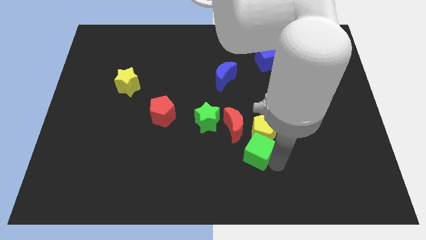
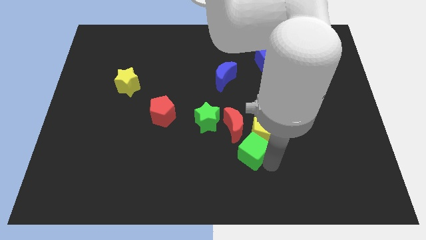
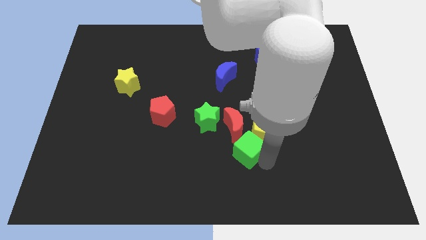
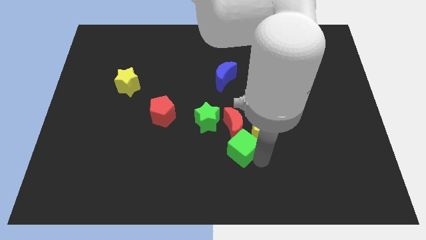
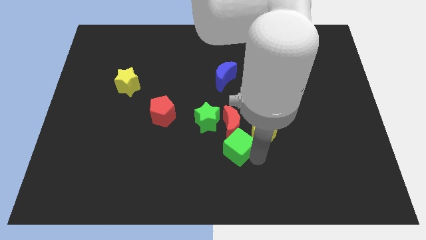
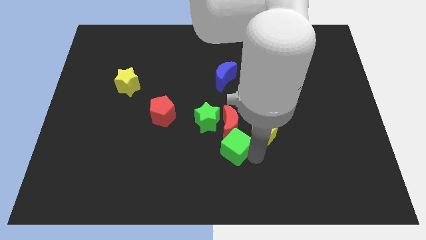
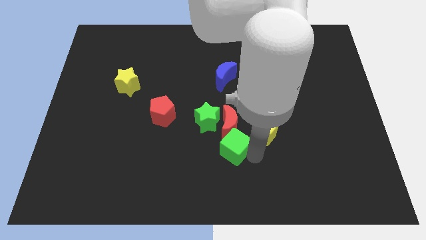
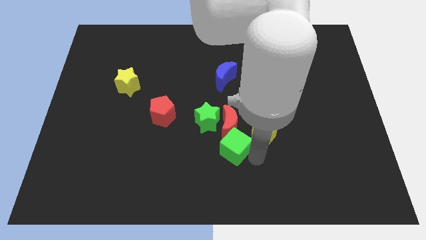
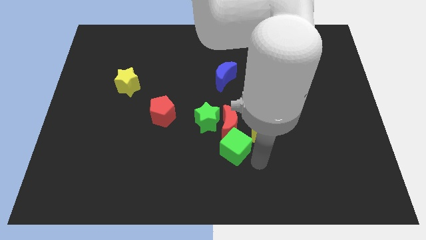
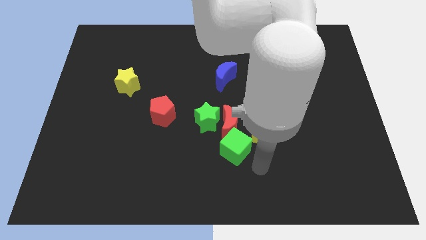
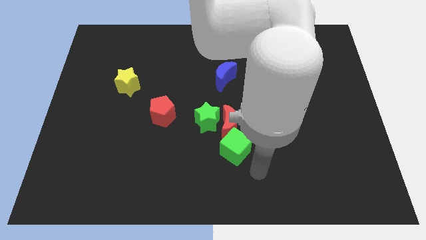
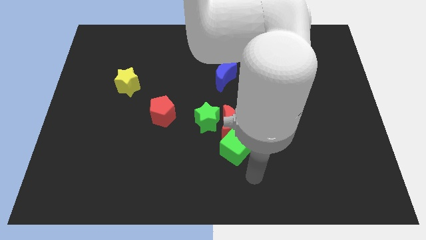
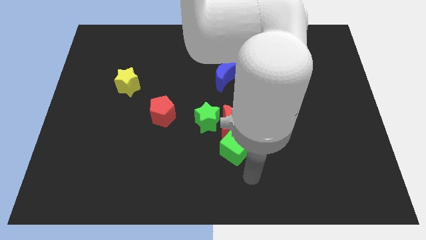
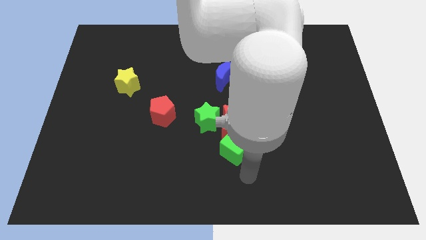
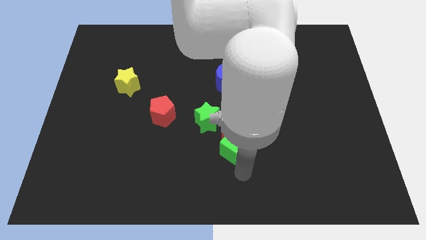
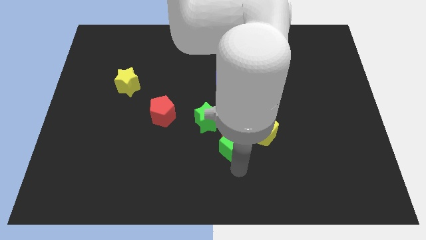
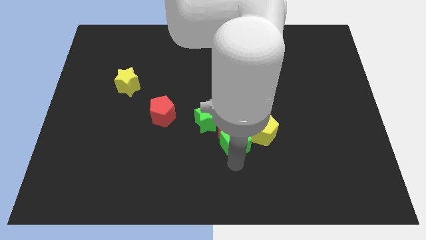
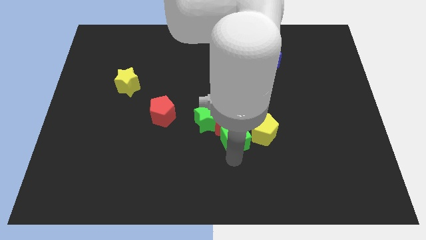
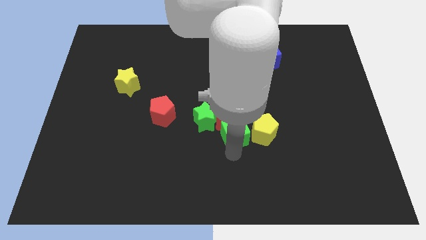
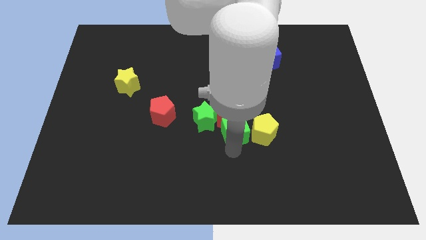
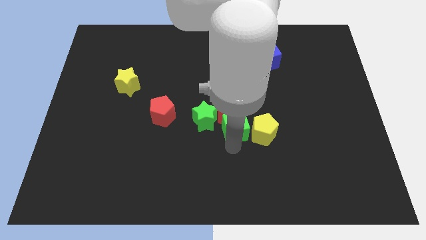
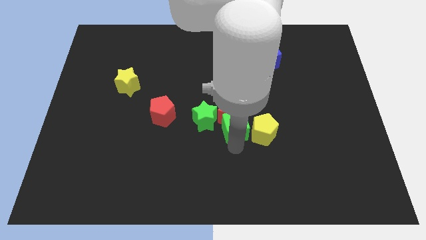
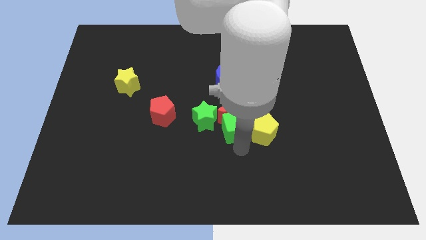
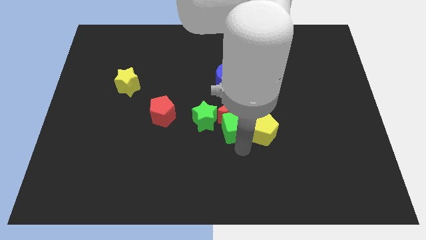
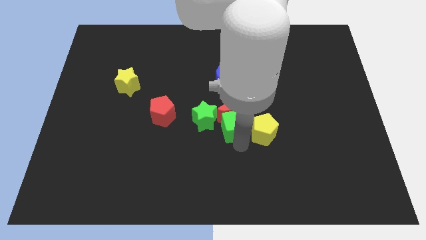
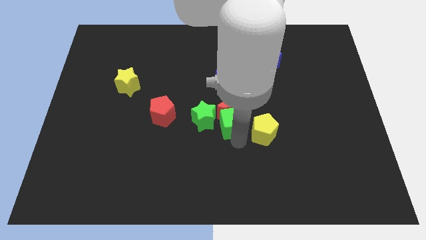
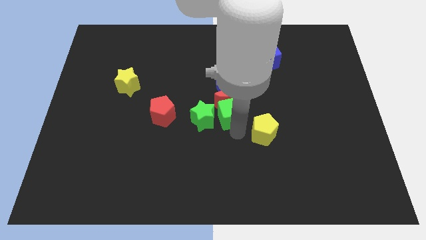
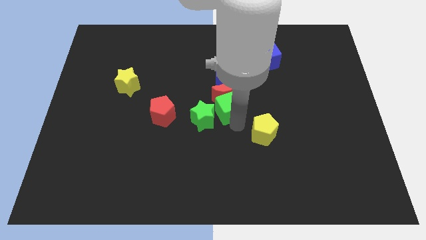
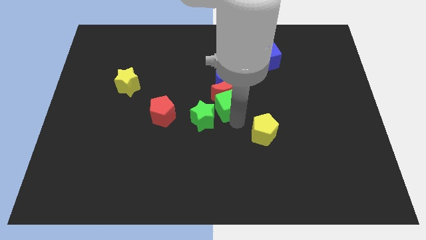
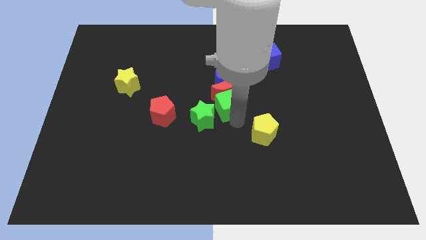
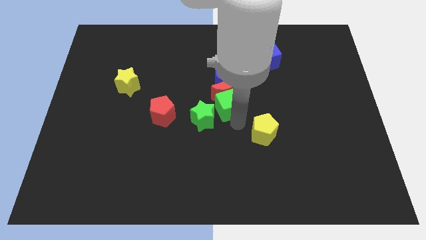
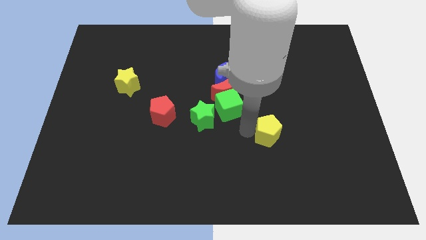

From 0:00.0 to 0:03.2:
push green cube into the red moon

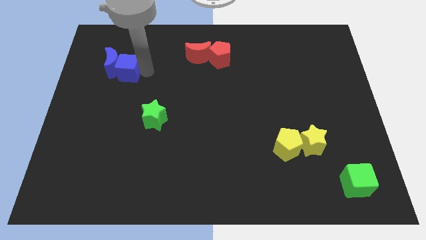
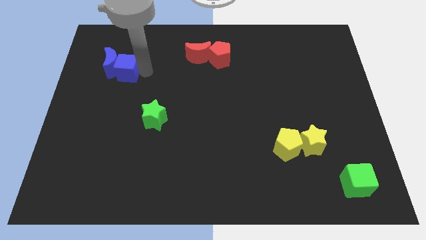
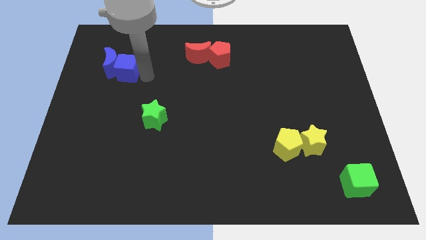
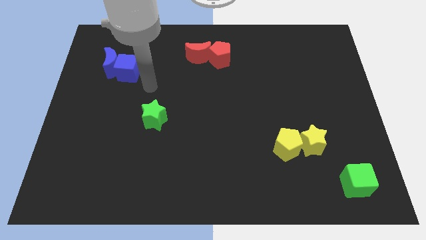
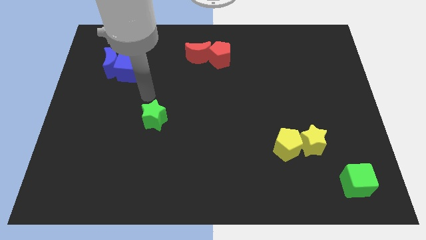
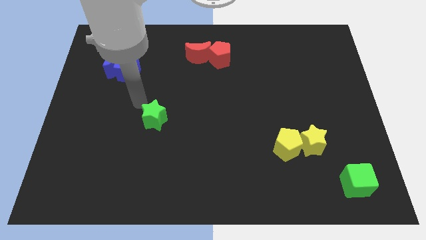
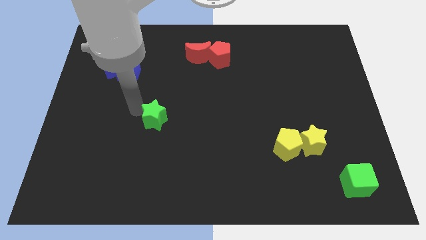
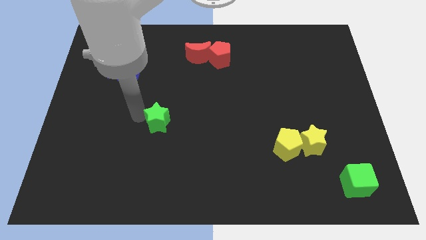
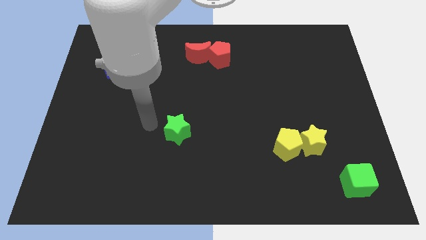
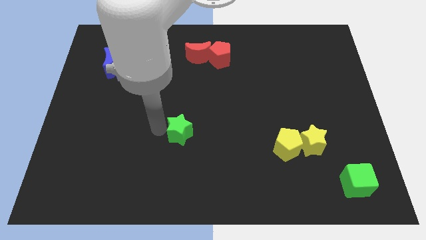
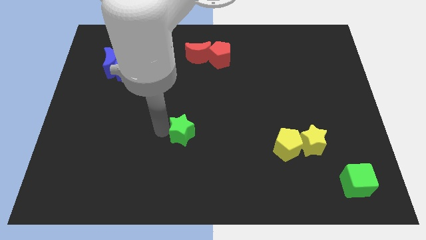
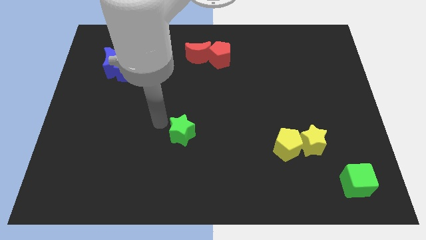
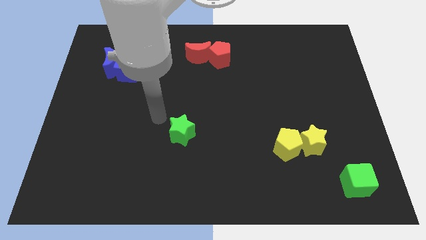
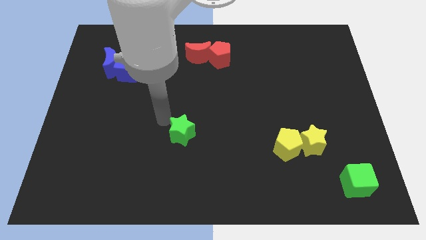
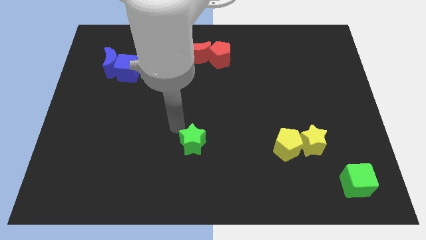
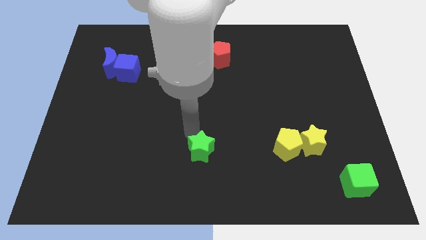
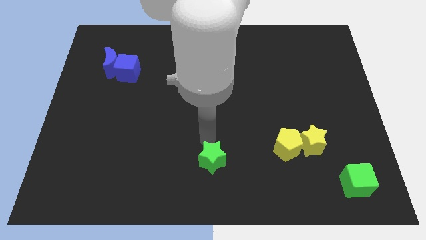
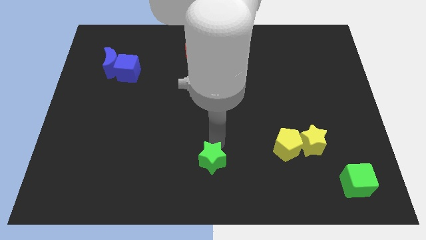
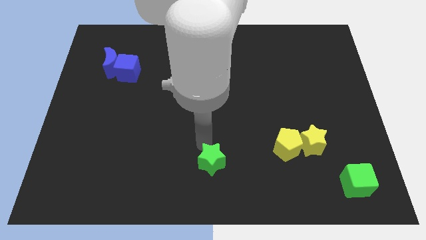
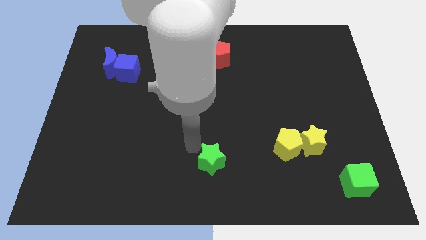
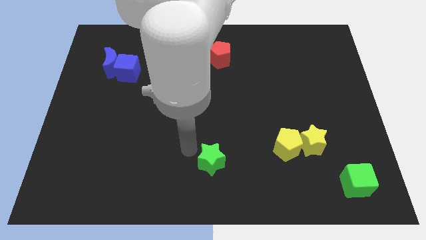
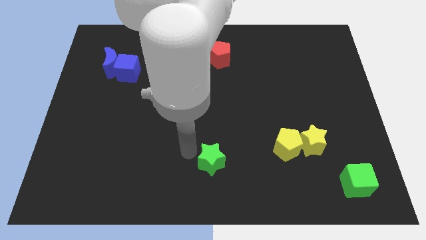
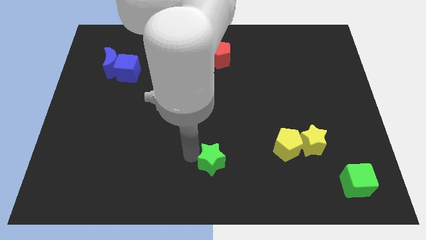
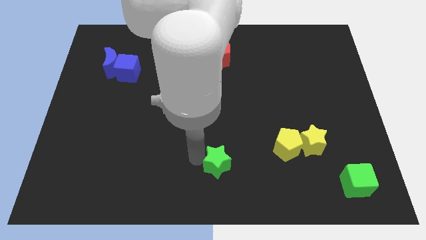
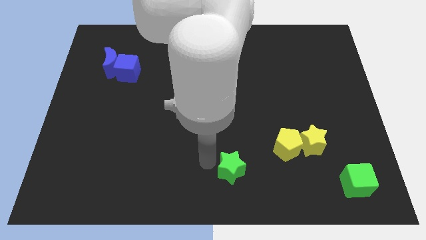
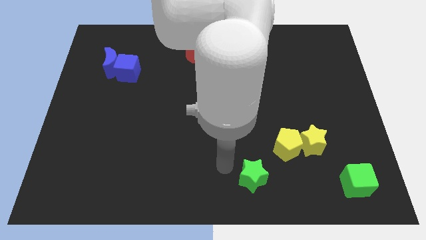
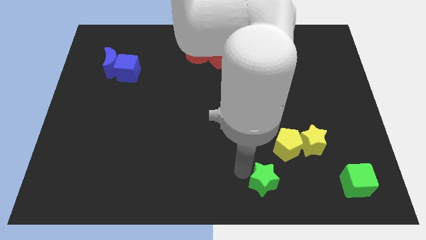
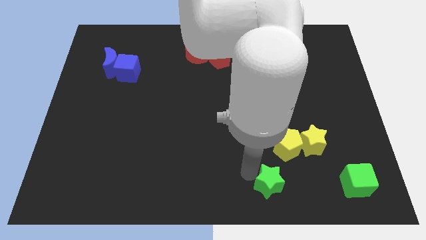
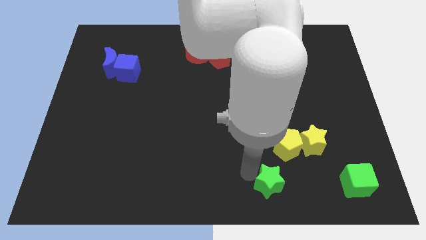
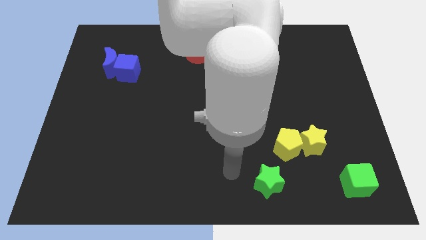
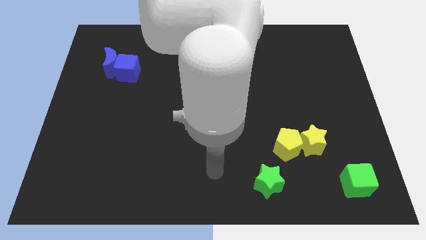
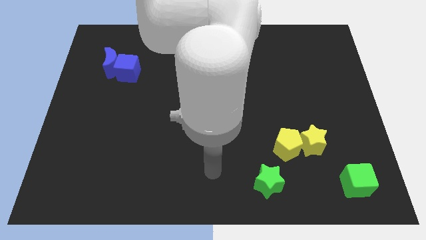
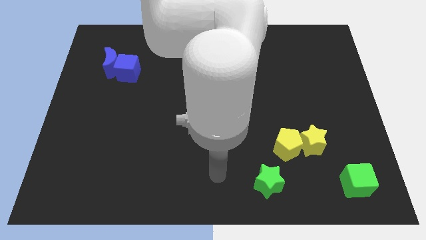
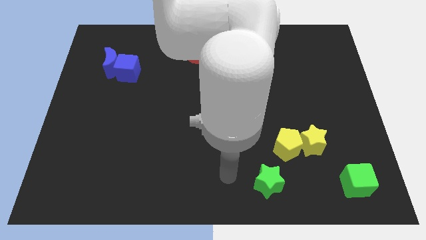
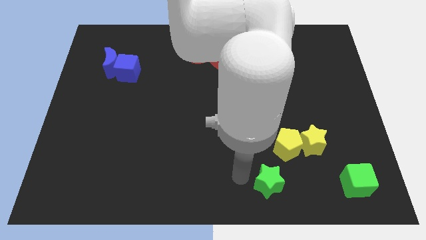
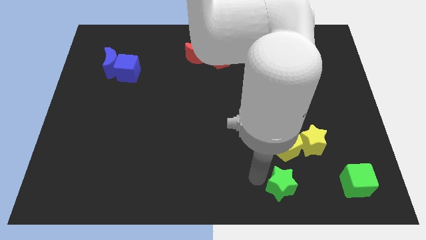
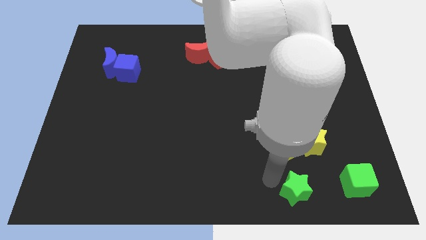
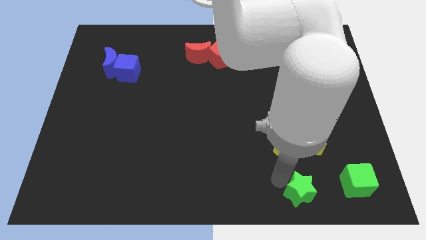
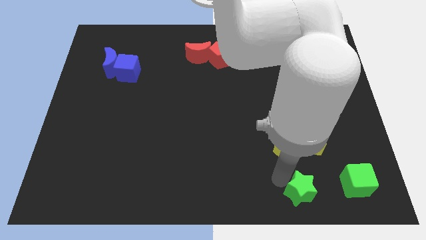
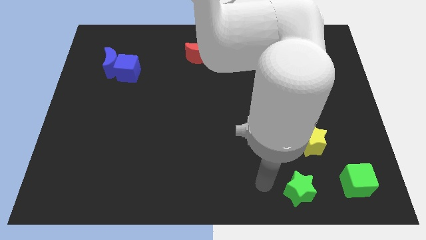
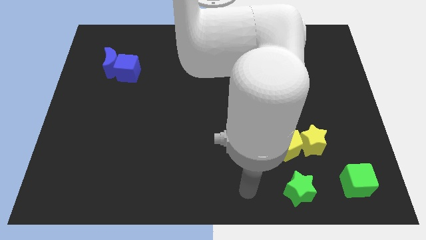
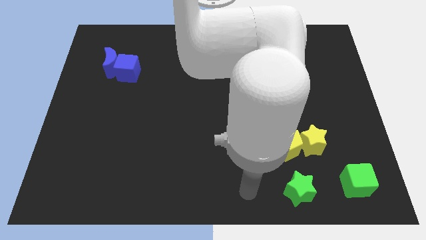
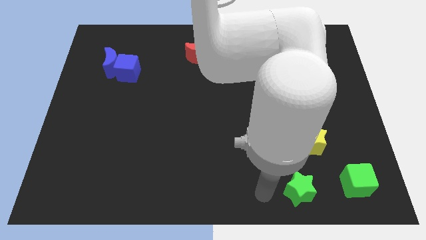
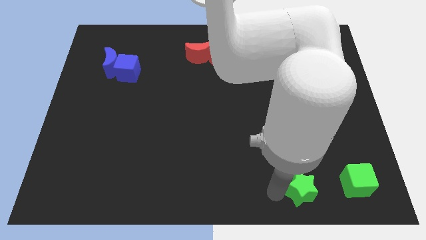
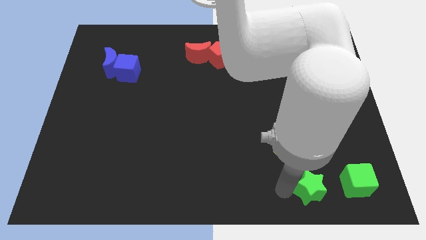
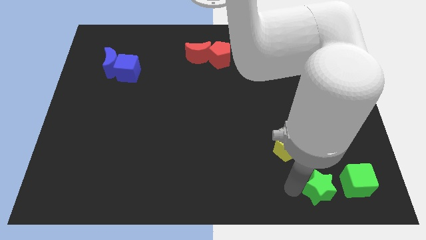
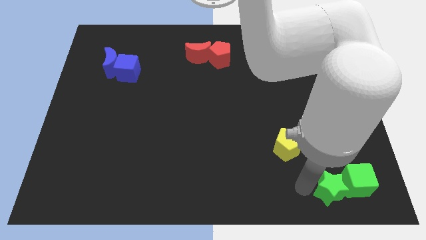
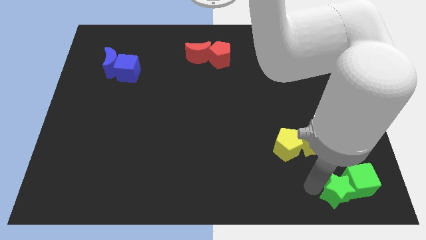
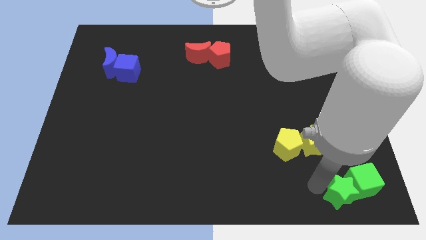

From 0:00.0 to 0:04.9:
place the green star to the left side of green cube

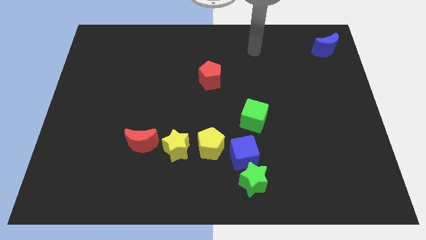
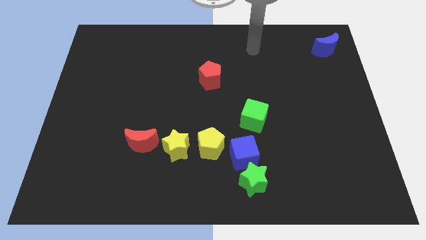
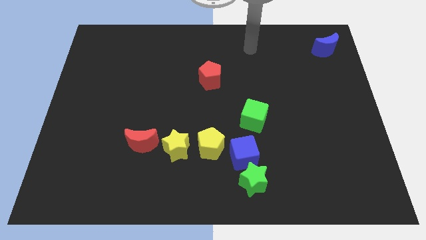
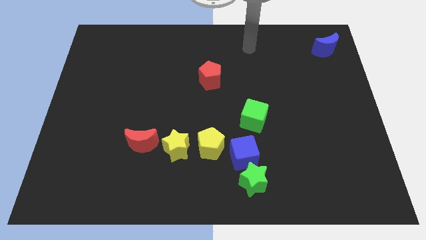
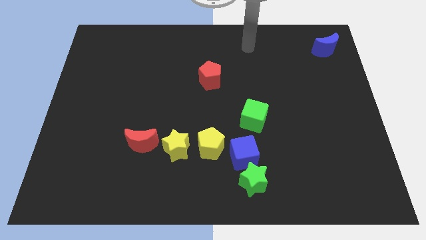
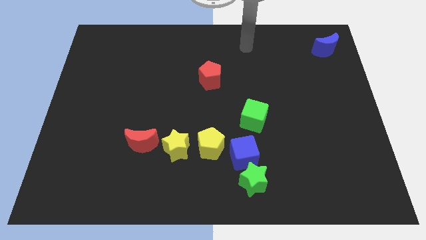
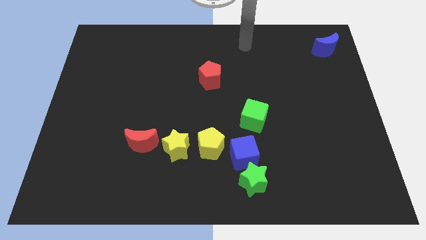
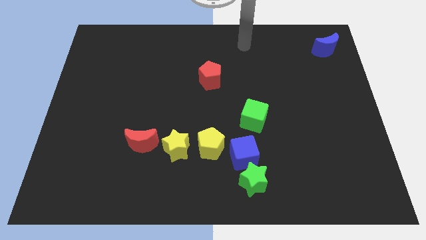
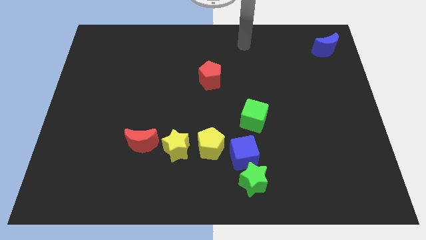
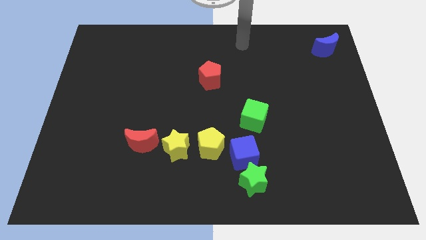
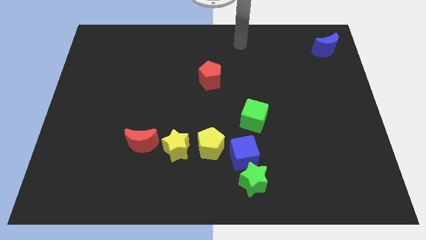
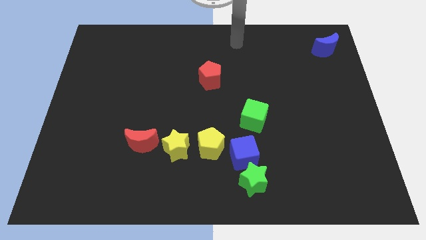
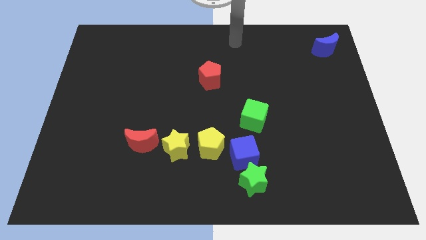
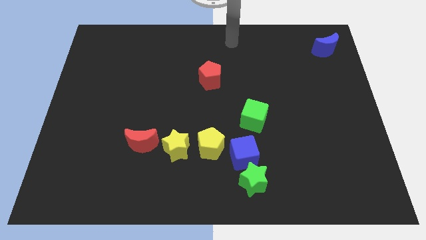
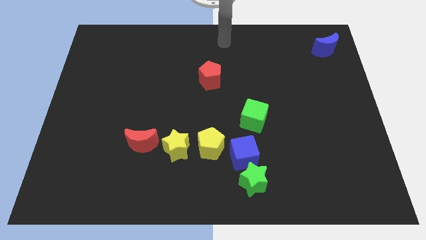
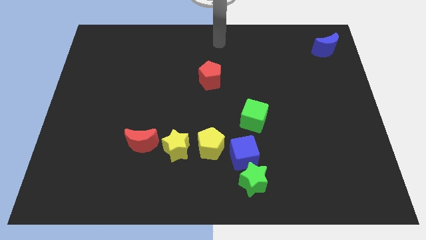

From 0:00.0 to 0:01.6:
place the arm at the center top
